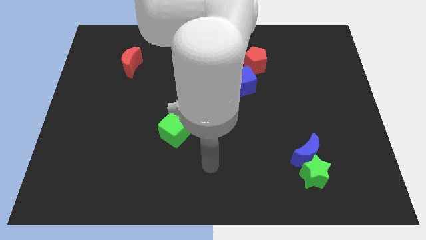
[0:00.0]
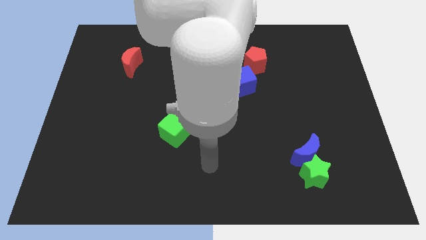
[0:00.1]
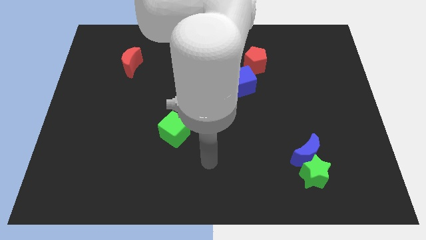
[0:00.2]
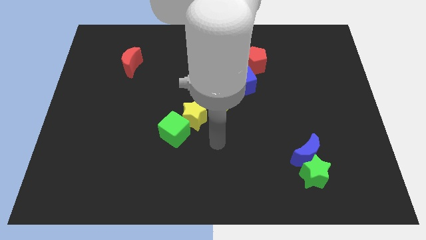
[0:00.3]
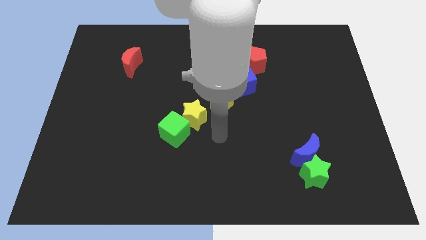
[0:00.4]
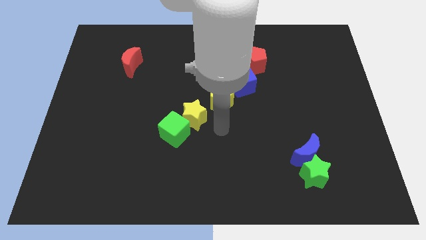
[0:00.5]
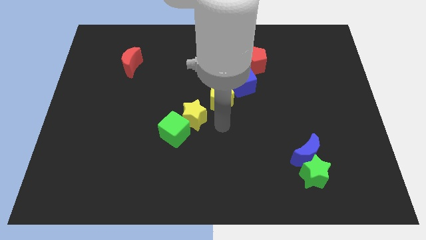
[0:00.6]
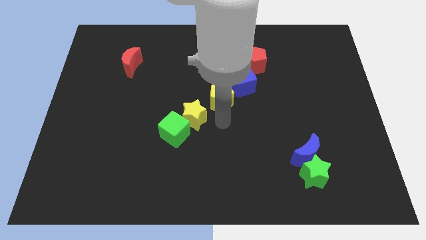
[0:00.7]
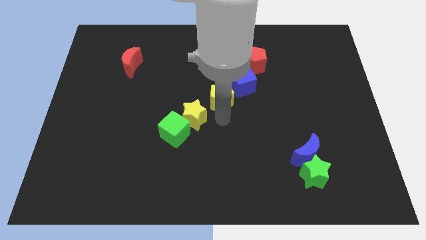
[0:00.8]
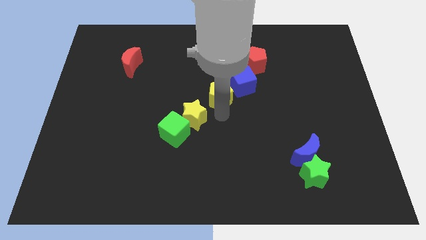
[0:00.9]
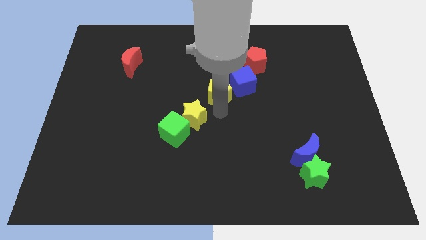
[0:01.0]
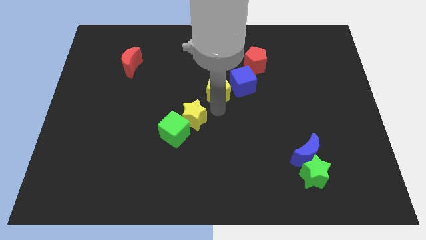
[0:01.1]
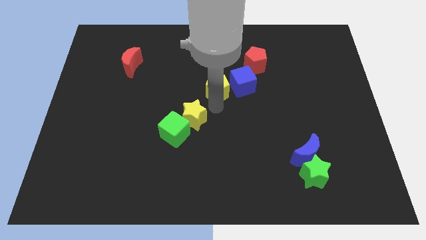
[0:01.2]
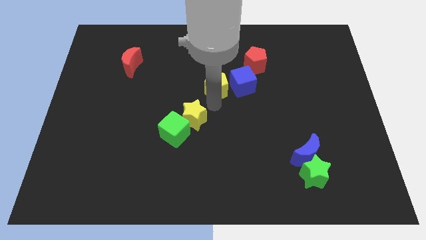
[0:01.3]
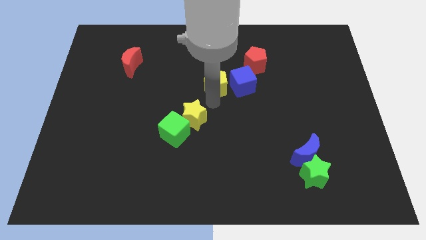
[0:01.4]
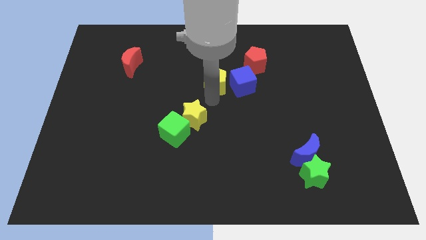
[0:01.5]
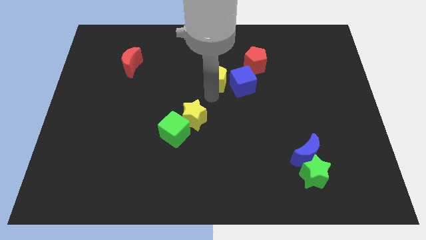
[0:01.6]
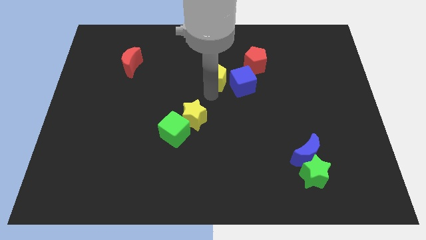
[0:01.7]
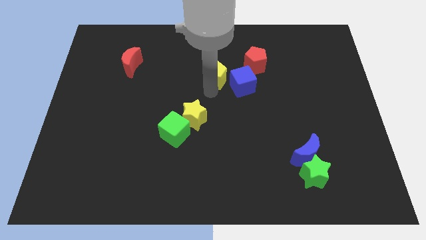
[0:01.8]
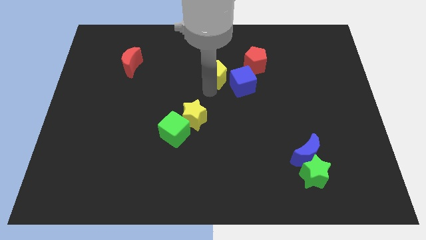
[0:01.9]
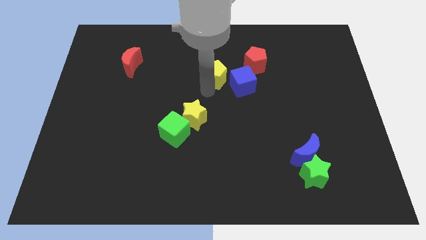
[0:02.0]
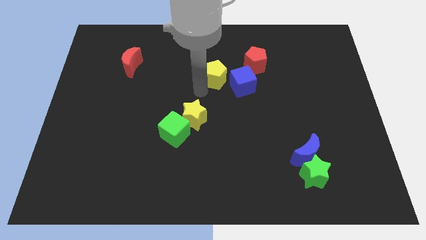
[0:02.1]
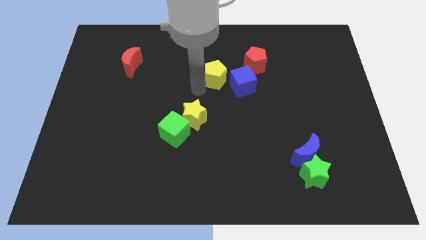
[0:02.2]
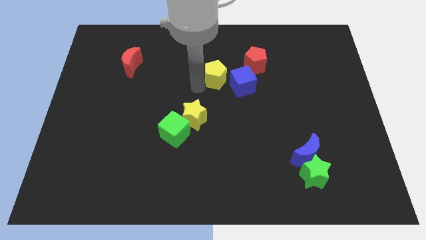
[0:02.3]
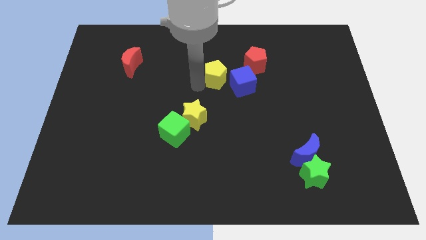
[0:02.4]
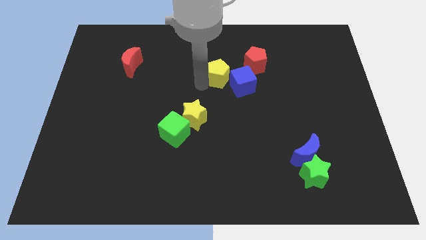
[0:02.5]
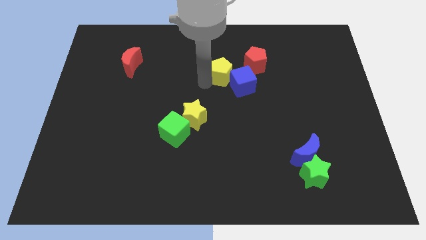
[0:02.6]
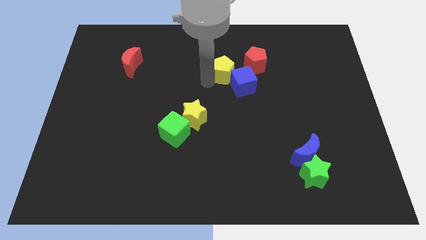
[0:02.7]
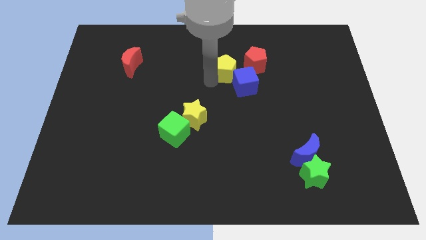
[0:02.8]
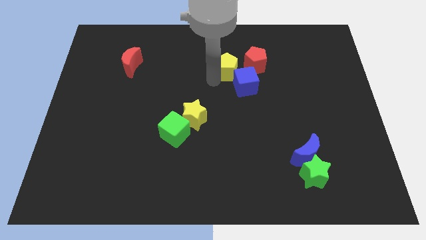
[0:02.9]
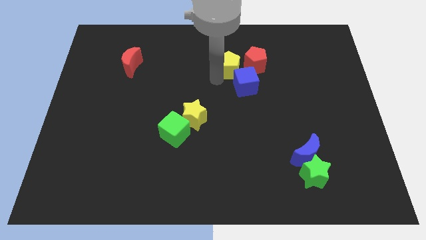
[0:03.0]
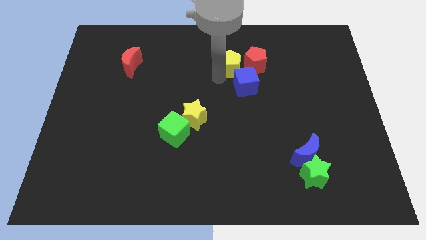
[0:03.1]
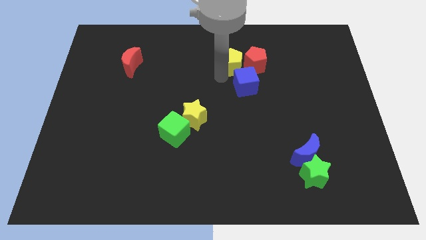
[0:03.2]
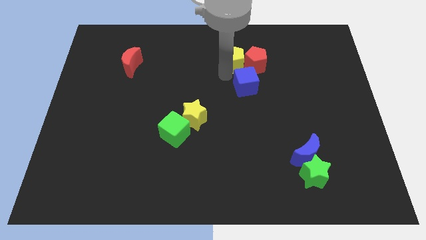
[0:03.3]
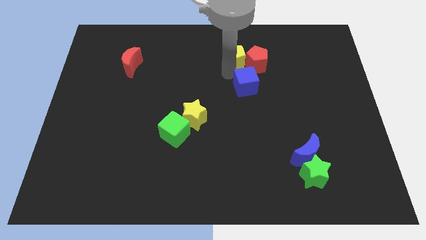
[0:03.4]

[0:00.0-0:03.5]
slide the yellow pentagon to the red pentagon

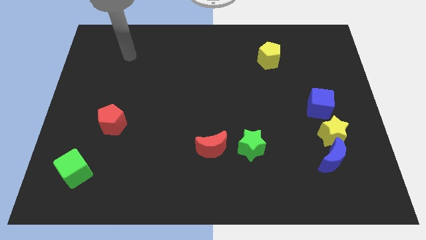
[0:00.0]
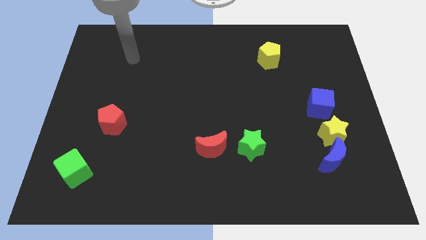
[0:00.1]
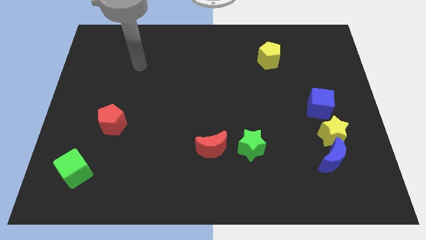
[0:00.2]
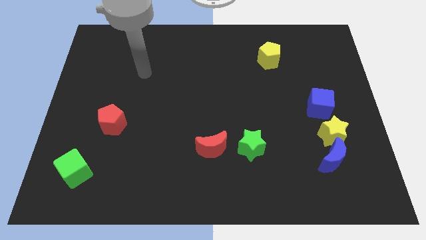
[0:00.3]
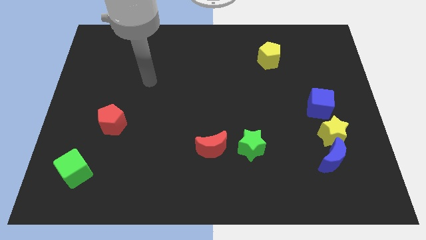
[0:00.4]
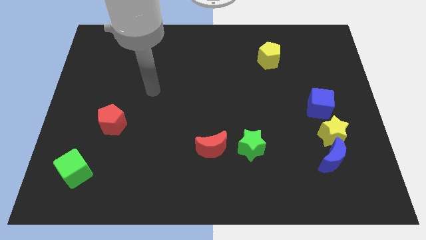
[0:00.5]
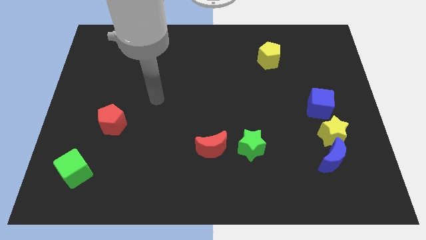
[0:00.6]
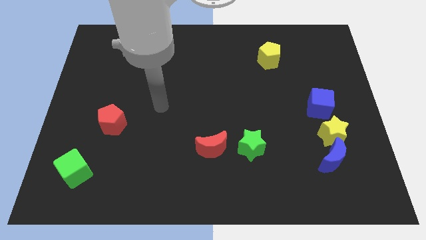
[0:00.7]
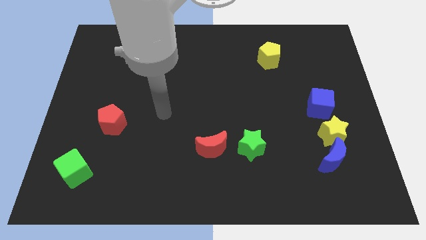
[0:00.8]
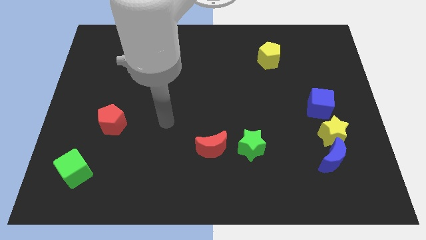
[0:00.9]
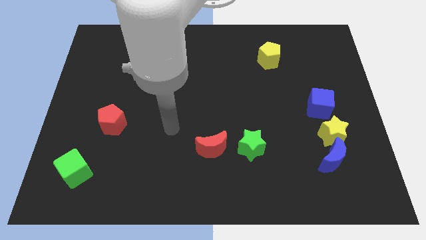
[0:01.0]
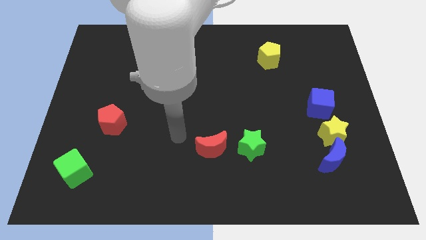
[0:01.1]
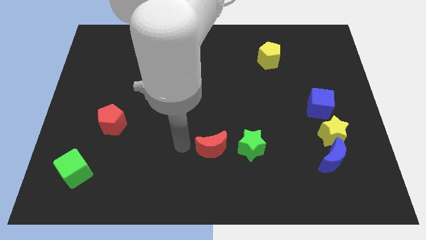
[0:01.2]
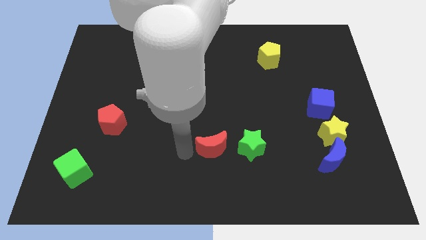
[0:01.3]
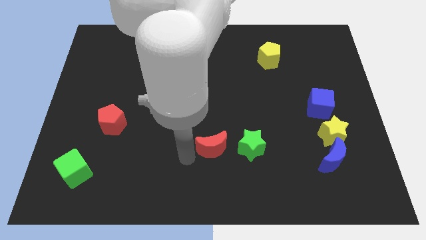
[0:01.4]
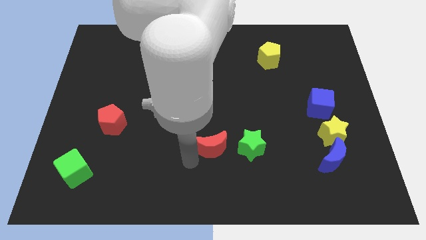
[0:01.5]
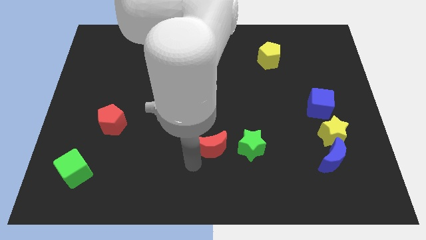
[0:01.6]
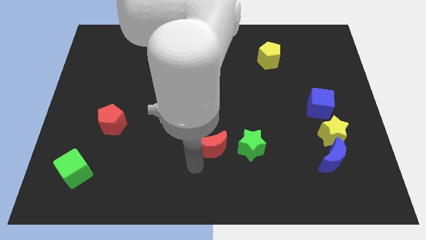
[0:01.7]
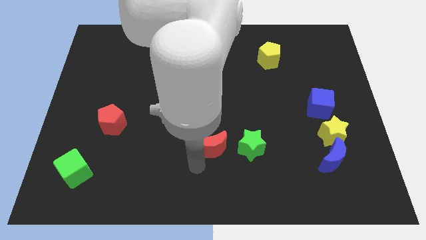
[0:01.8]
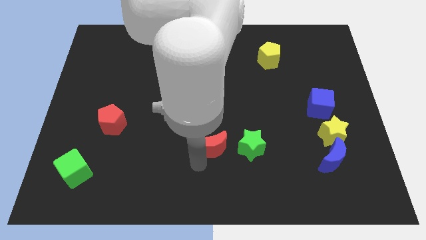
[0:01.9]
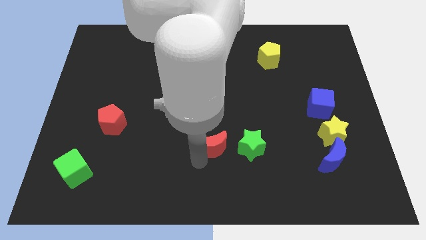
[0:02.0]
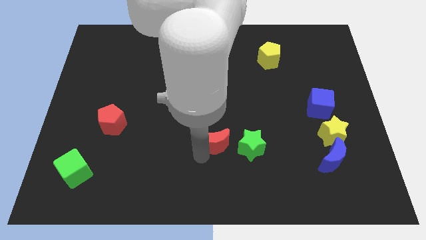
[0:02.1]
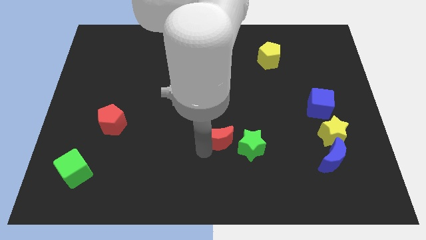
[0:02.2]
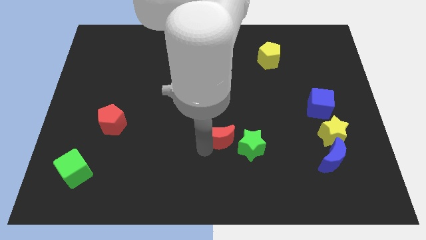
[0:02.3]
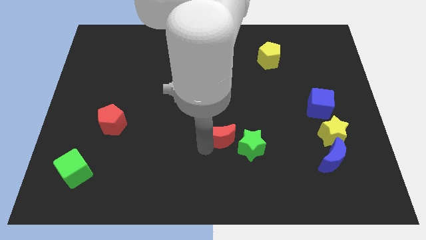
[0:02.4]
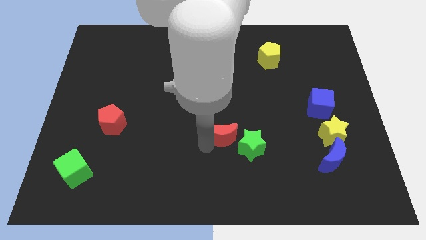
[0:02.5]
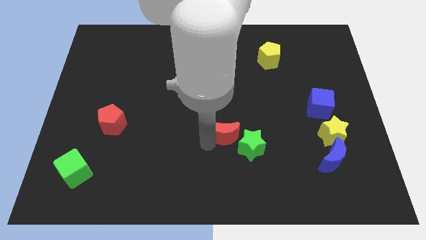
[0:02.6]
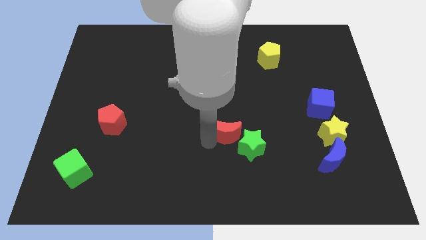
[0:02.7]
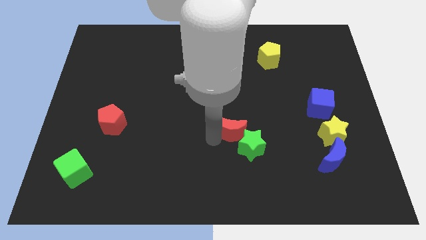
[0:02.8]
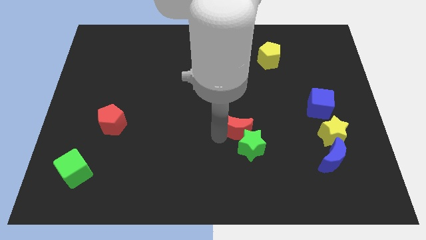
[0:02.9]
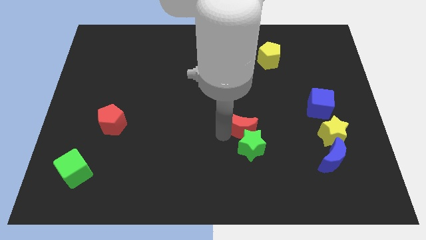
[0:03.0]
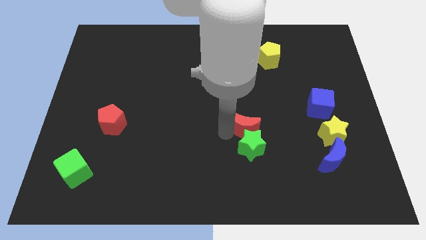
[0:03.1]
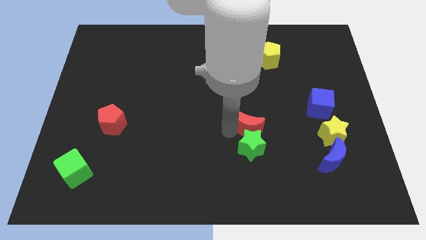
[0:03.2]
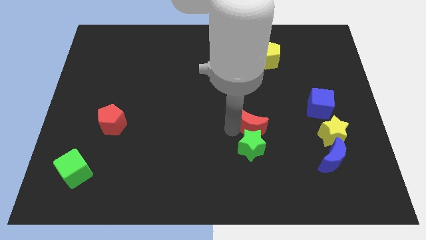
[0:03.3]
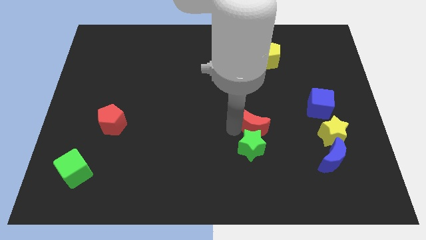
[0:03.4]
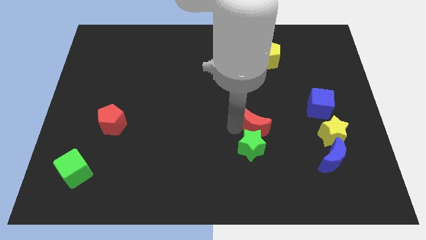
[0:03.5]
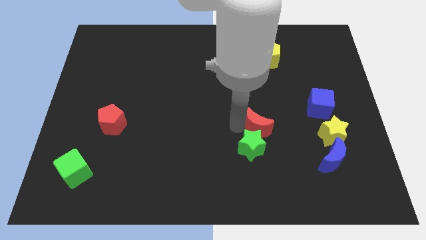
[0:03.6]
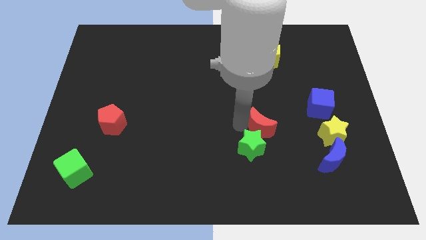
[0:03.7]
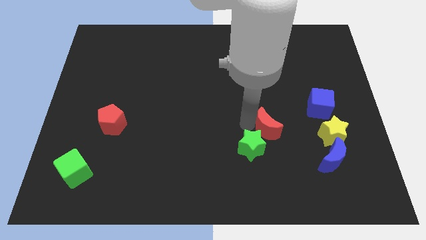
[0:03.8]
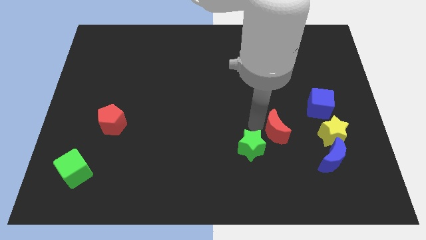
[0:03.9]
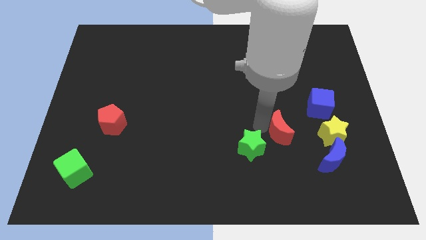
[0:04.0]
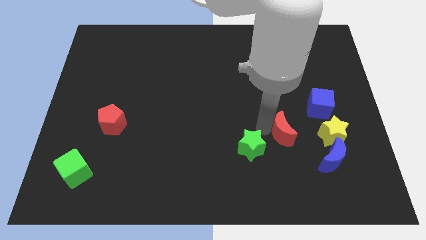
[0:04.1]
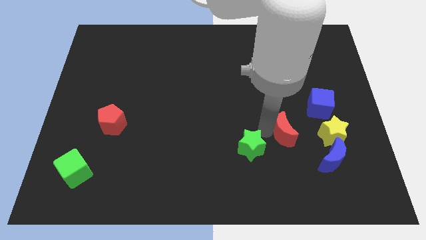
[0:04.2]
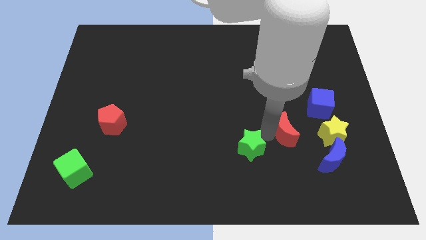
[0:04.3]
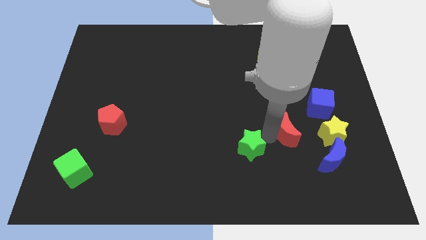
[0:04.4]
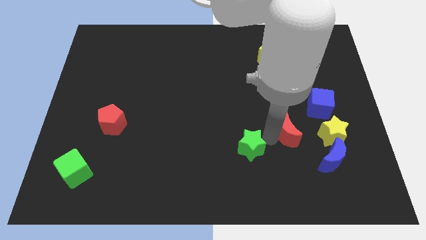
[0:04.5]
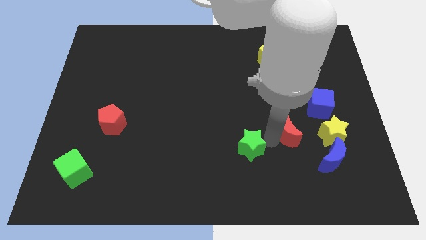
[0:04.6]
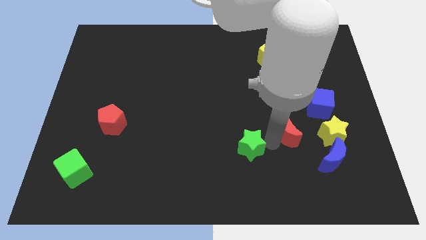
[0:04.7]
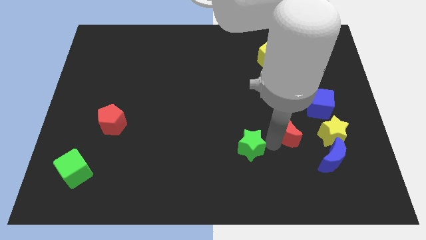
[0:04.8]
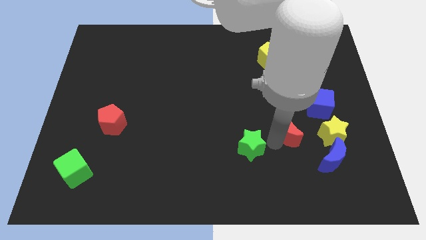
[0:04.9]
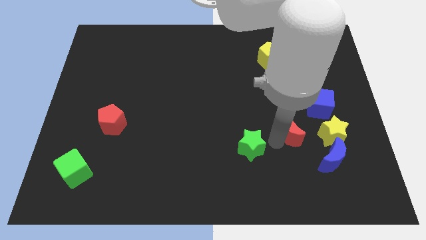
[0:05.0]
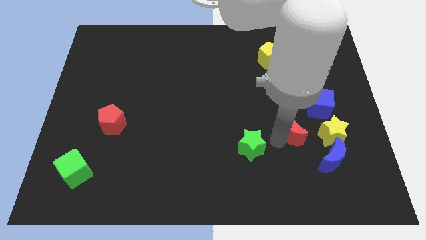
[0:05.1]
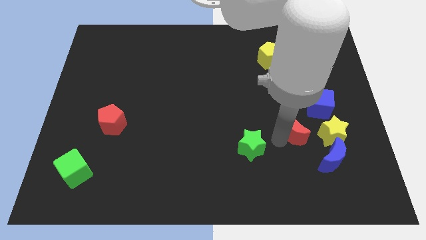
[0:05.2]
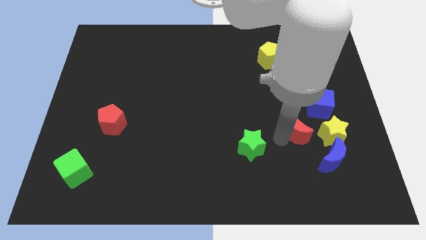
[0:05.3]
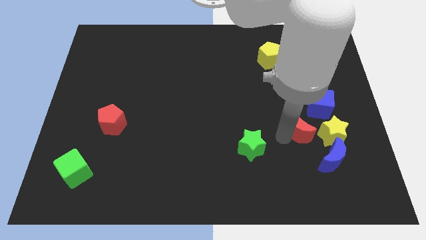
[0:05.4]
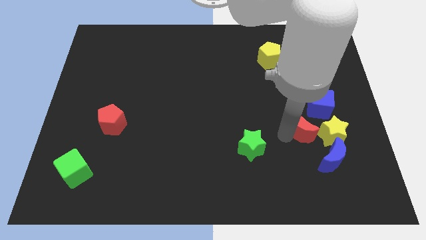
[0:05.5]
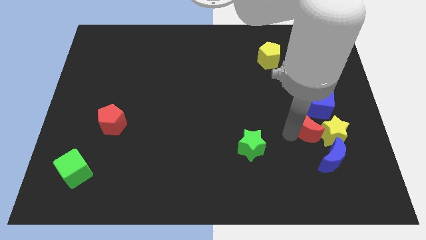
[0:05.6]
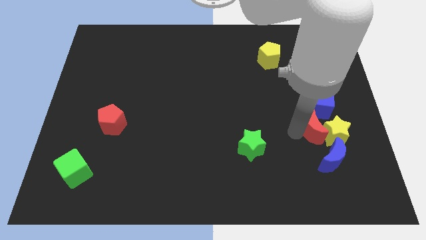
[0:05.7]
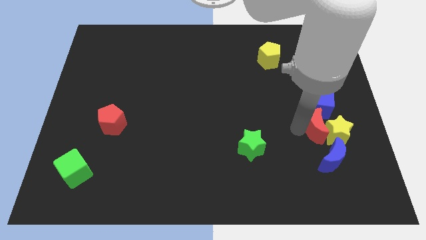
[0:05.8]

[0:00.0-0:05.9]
slide the red moon towards the yellow star
